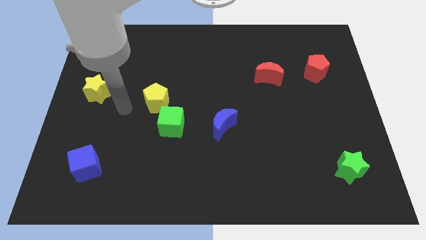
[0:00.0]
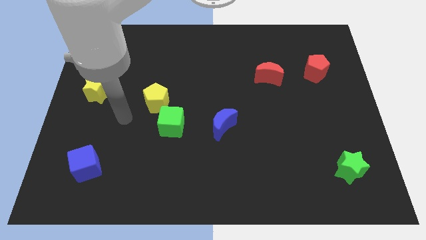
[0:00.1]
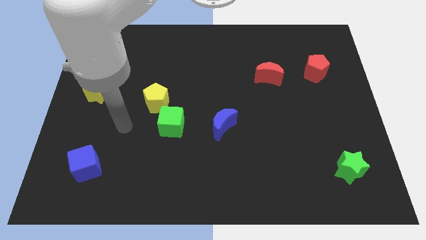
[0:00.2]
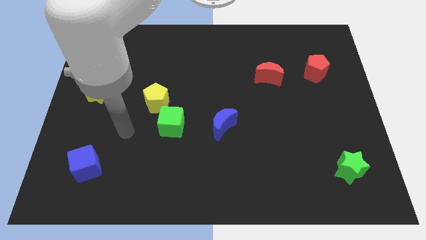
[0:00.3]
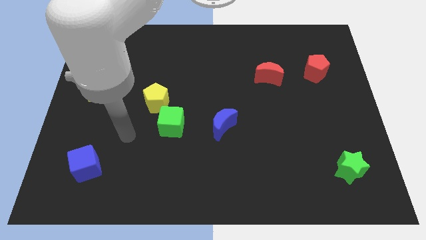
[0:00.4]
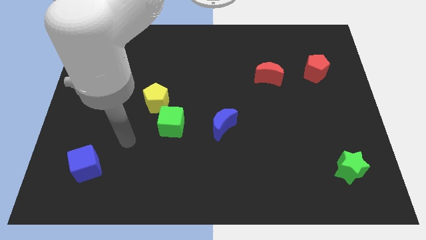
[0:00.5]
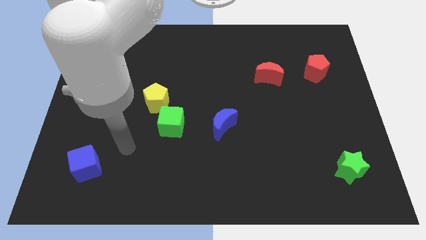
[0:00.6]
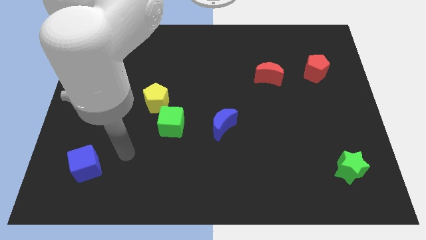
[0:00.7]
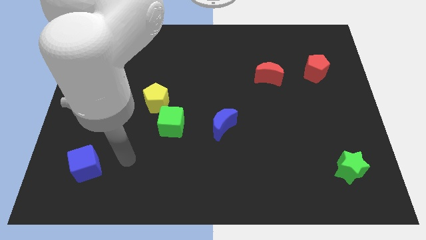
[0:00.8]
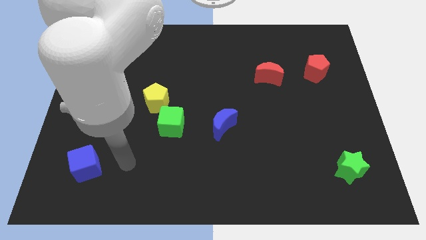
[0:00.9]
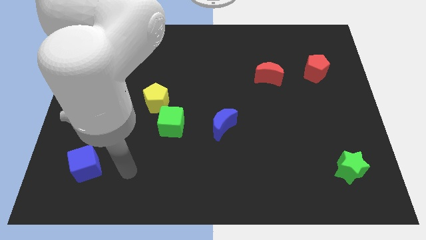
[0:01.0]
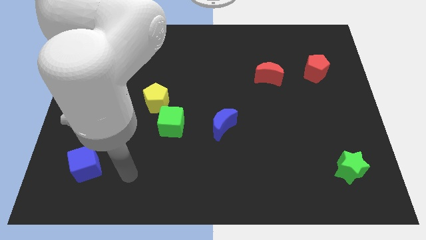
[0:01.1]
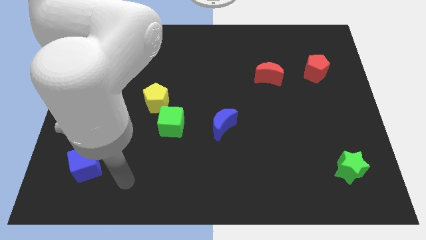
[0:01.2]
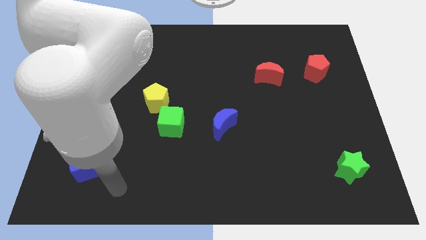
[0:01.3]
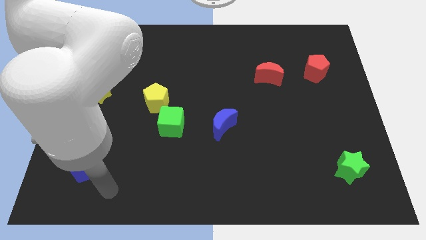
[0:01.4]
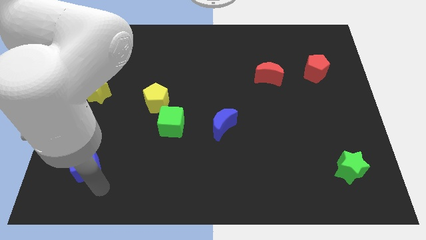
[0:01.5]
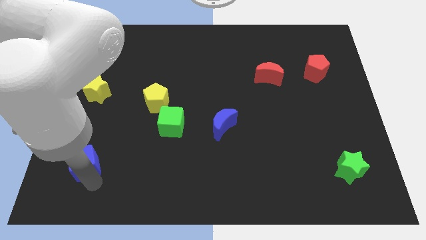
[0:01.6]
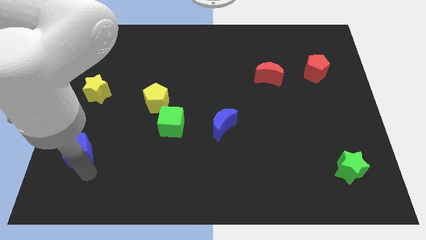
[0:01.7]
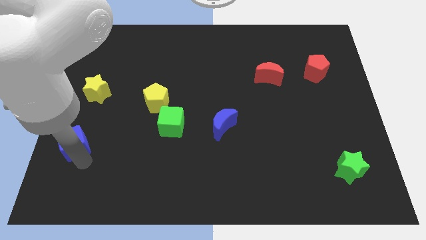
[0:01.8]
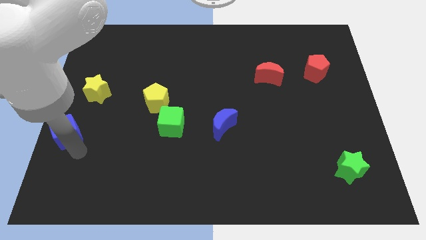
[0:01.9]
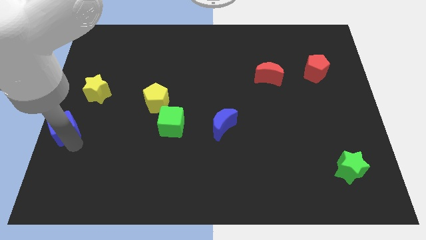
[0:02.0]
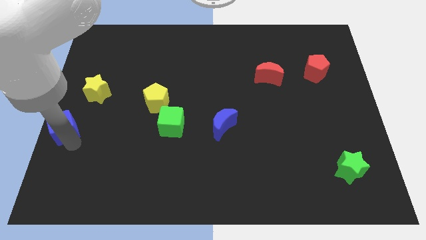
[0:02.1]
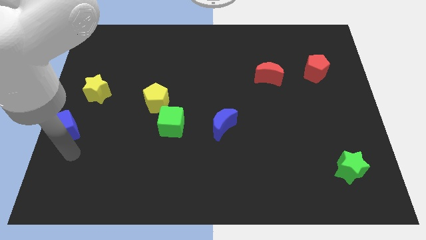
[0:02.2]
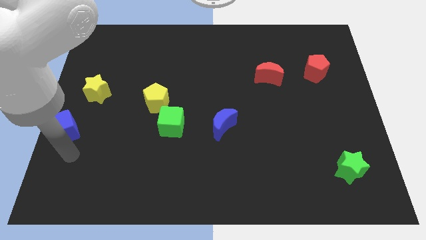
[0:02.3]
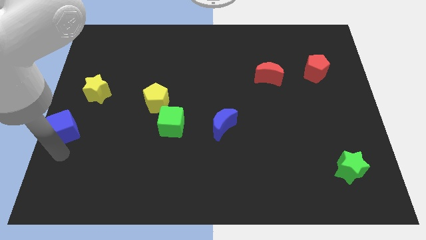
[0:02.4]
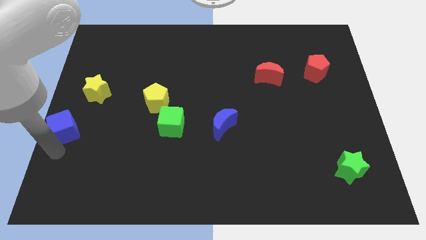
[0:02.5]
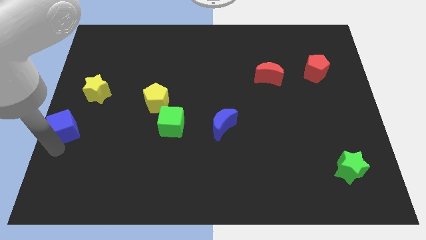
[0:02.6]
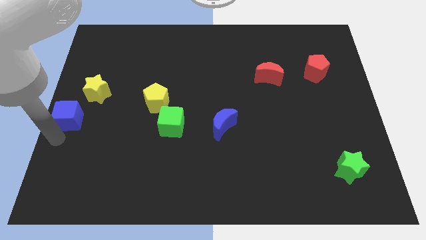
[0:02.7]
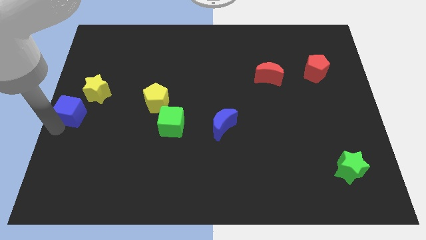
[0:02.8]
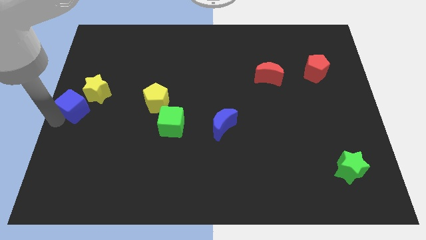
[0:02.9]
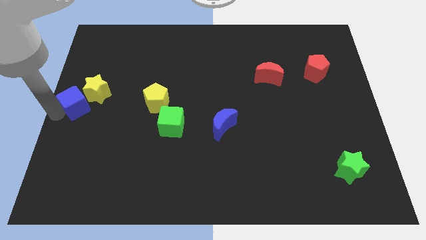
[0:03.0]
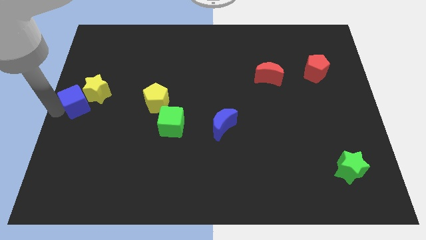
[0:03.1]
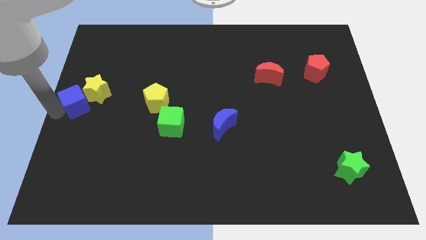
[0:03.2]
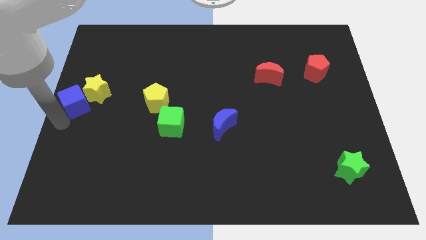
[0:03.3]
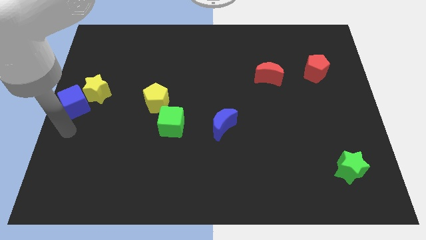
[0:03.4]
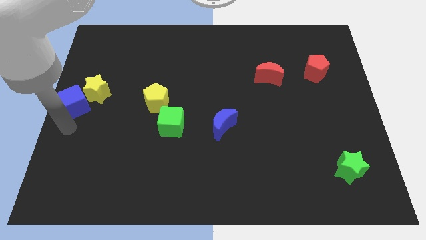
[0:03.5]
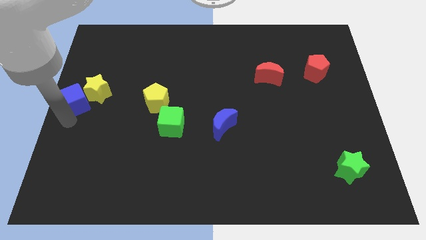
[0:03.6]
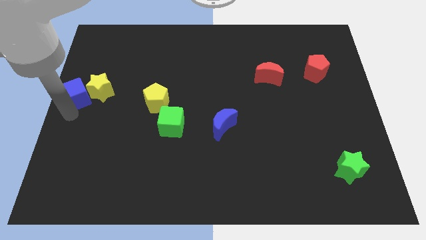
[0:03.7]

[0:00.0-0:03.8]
move the blue cube to the left side of the yellow star

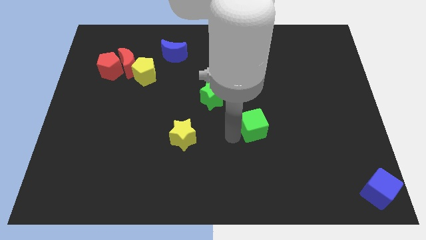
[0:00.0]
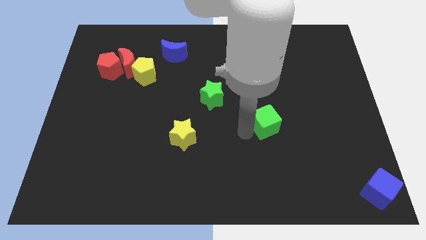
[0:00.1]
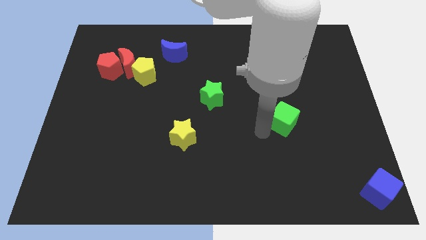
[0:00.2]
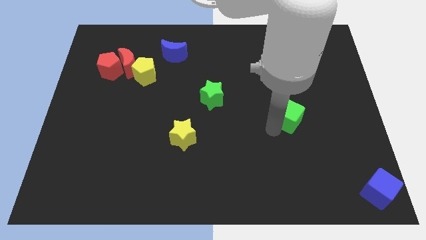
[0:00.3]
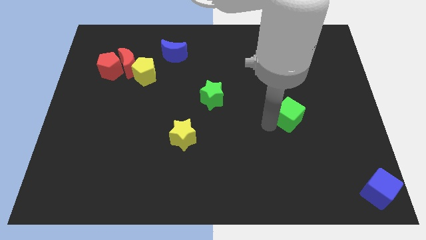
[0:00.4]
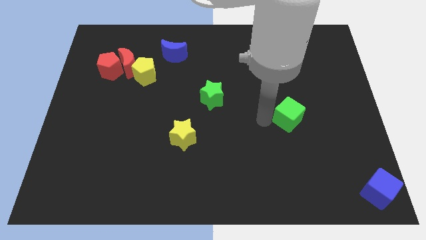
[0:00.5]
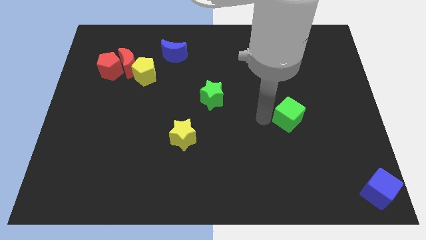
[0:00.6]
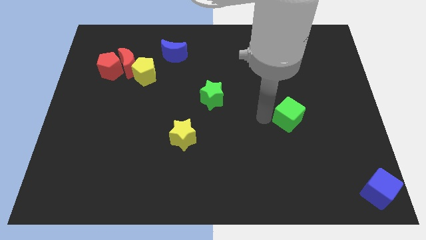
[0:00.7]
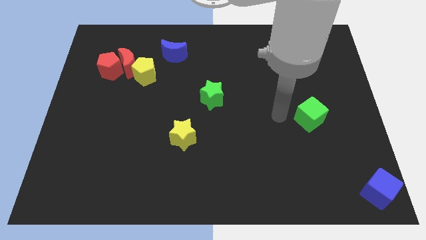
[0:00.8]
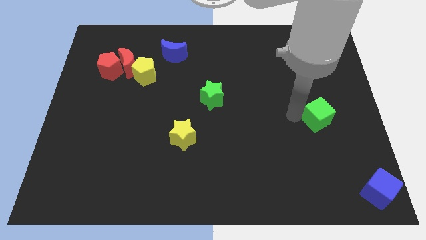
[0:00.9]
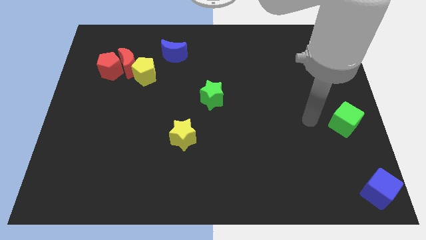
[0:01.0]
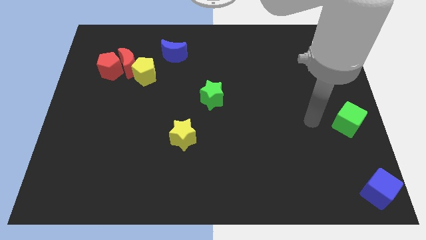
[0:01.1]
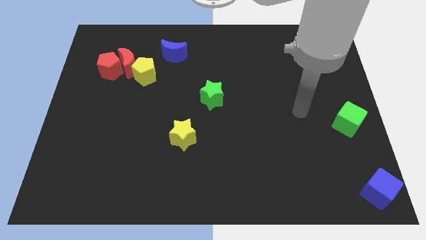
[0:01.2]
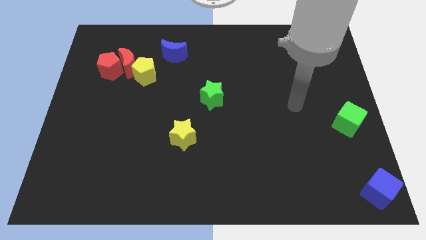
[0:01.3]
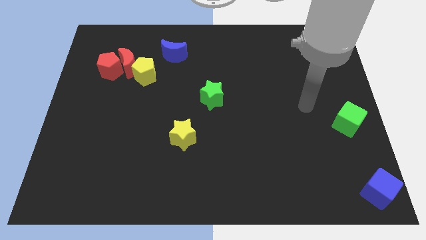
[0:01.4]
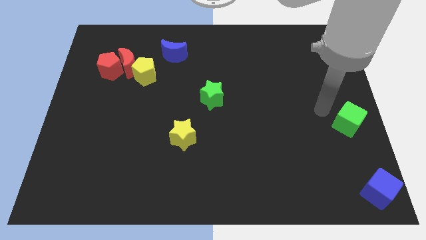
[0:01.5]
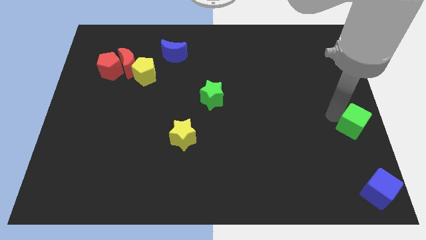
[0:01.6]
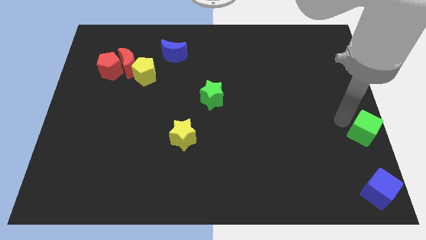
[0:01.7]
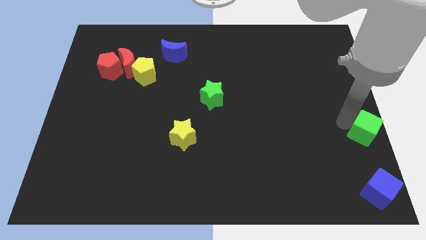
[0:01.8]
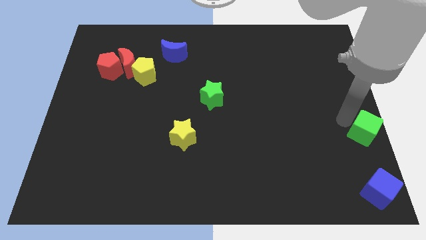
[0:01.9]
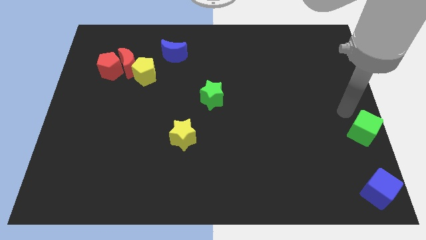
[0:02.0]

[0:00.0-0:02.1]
push the green cube to the right side of the board

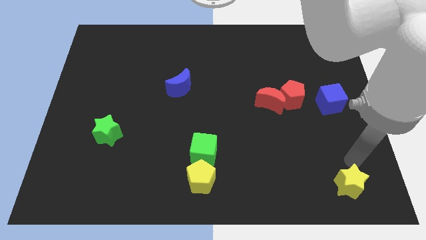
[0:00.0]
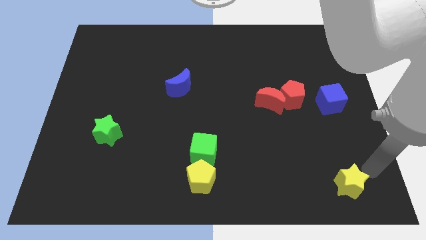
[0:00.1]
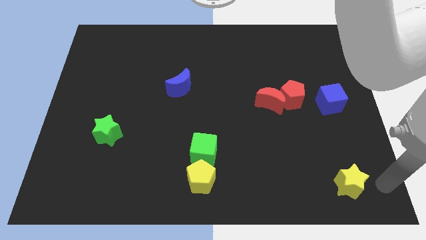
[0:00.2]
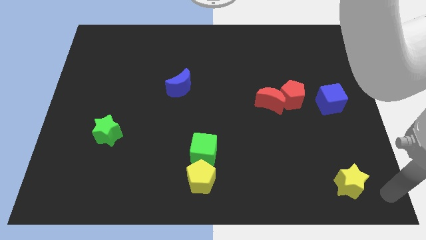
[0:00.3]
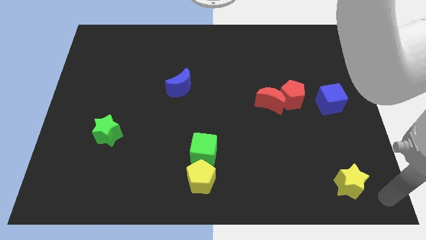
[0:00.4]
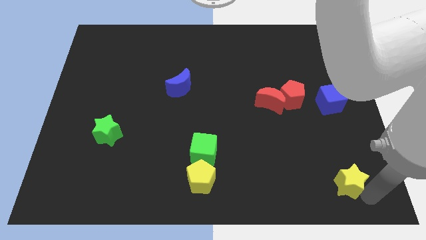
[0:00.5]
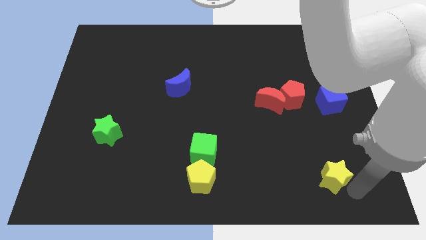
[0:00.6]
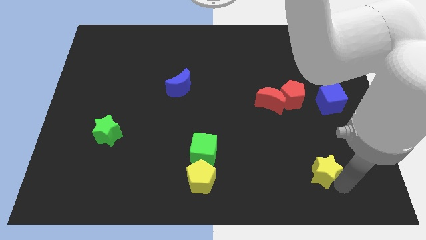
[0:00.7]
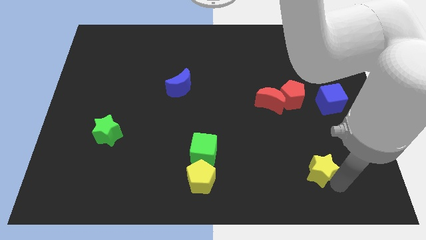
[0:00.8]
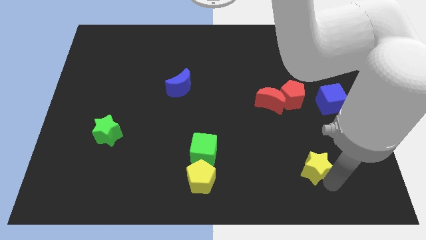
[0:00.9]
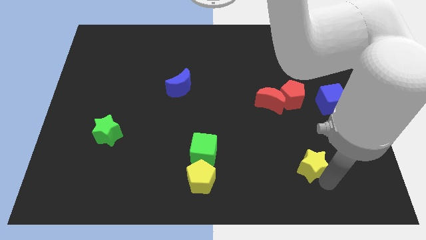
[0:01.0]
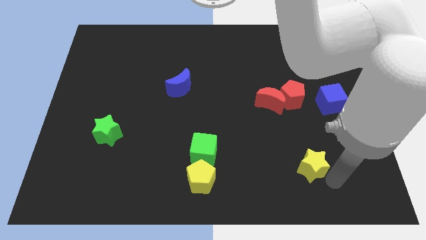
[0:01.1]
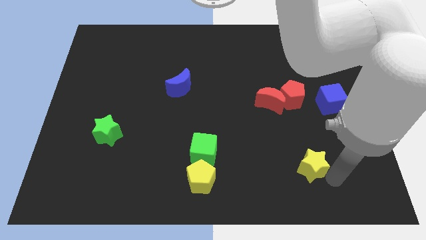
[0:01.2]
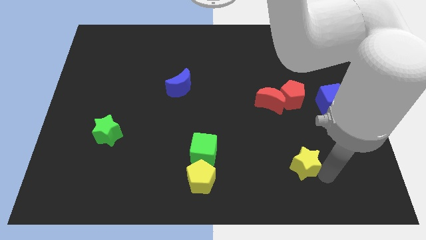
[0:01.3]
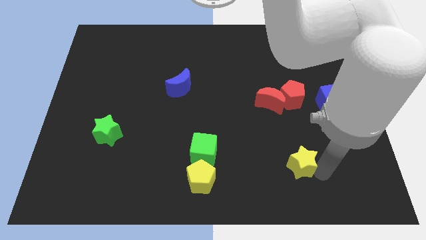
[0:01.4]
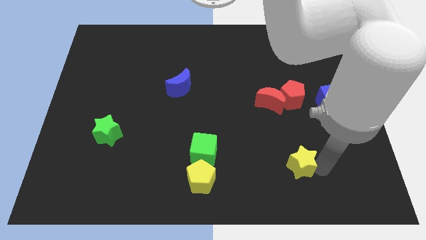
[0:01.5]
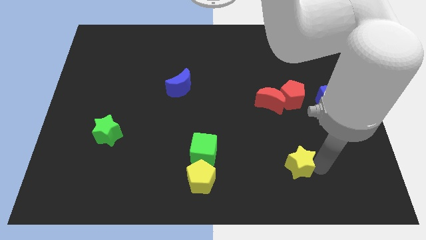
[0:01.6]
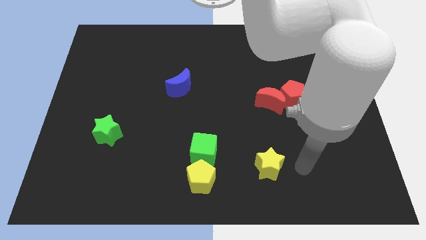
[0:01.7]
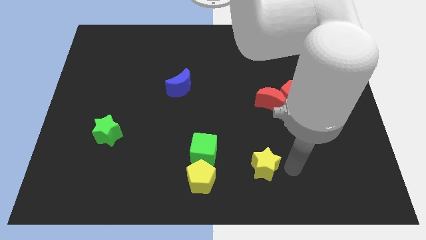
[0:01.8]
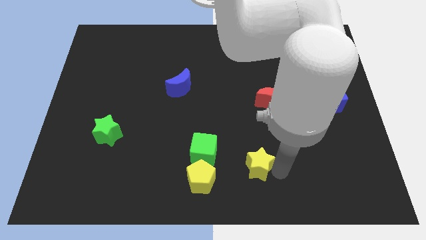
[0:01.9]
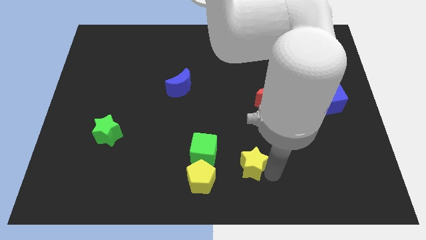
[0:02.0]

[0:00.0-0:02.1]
slightly move the yellow star towards the right of the green cube

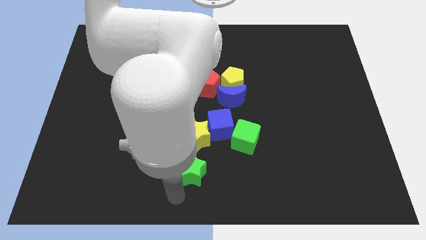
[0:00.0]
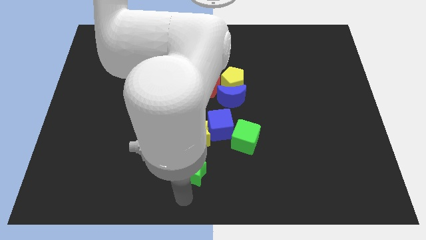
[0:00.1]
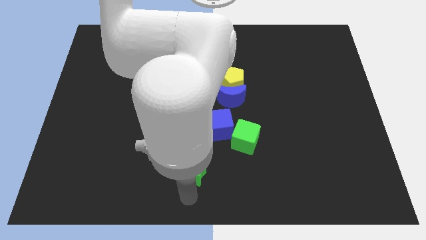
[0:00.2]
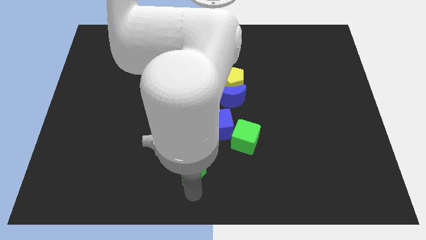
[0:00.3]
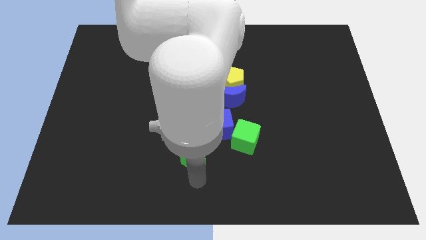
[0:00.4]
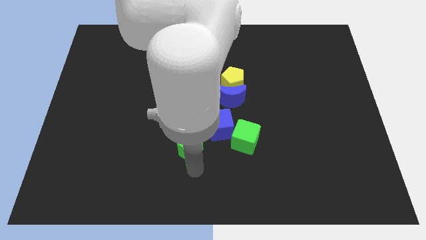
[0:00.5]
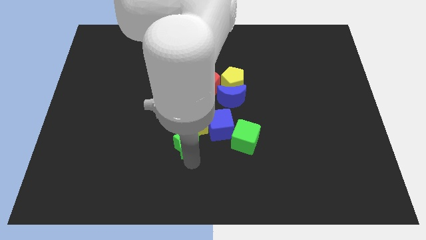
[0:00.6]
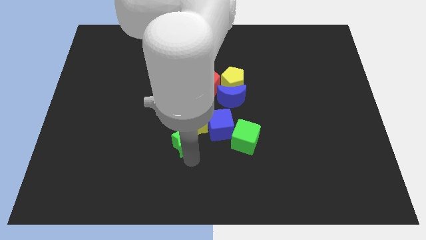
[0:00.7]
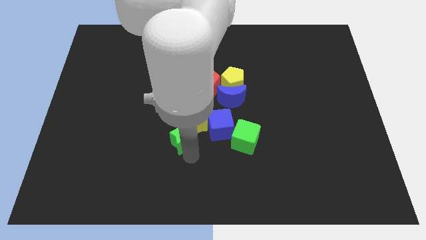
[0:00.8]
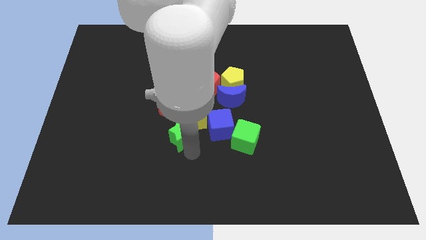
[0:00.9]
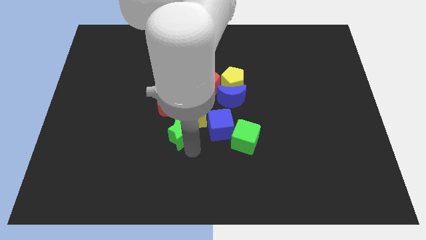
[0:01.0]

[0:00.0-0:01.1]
move green star into yellow star
